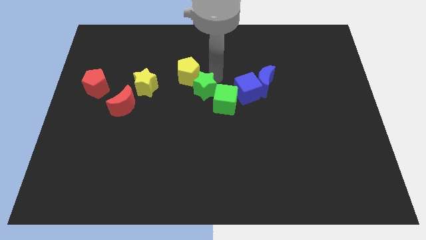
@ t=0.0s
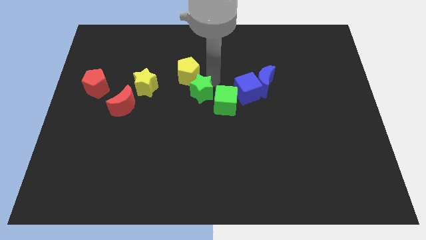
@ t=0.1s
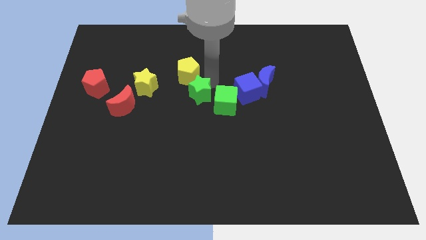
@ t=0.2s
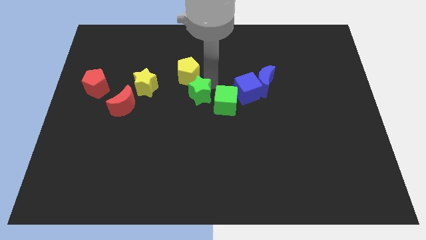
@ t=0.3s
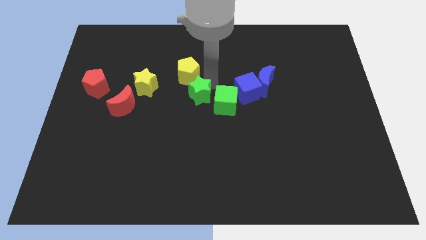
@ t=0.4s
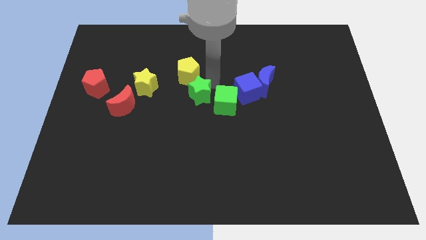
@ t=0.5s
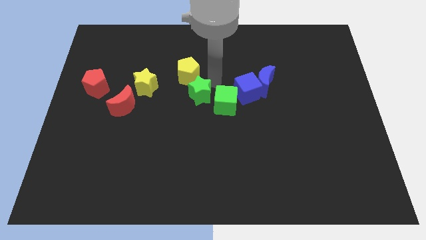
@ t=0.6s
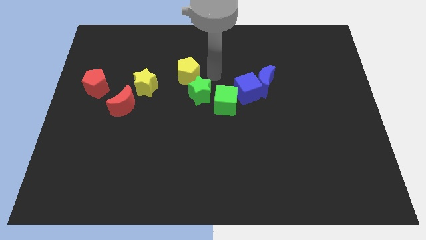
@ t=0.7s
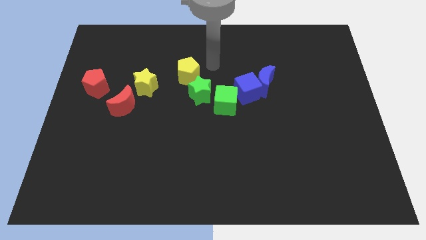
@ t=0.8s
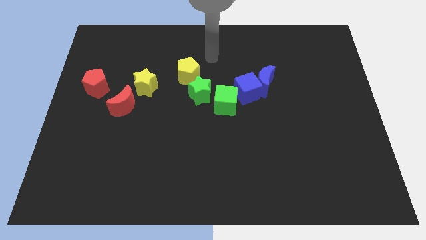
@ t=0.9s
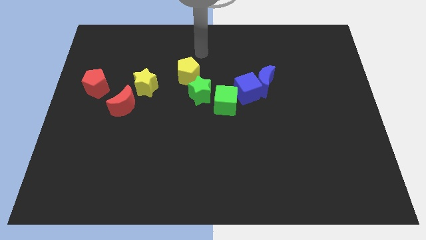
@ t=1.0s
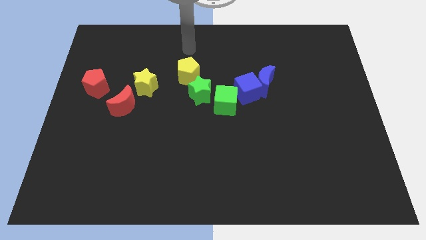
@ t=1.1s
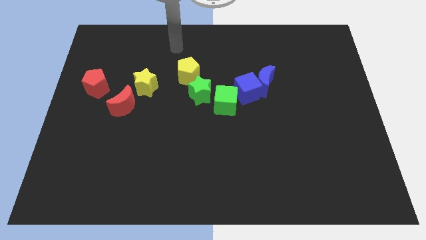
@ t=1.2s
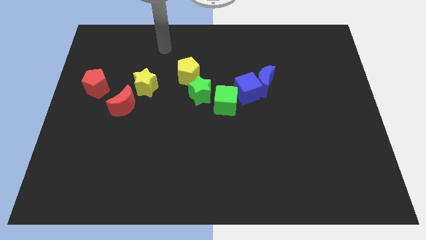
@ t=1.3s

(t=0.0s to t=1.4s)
move your arm away from the green star

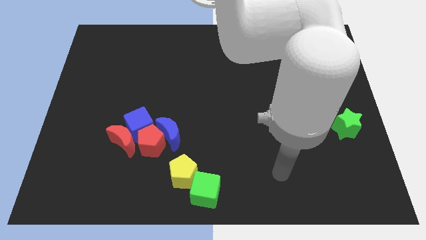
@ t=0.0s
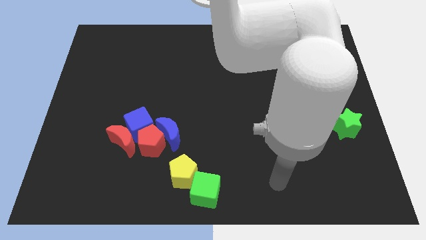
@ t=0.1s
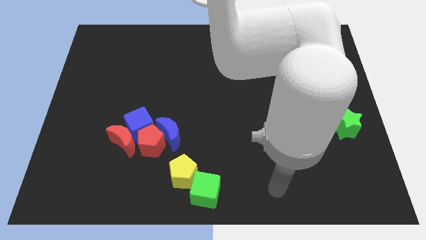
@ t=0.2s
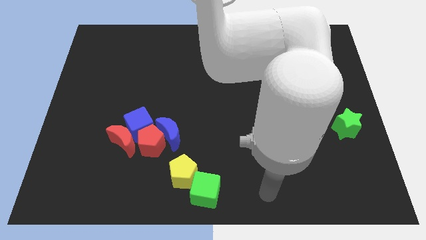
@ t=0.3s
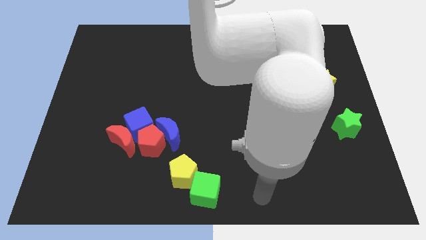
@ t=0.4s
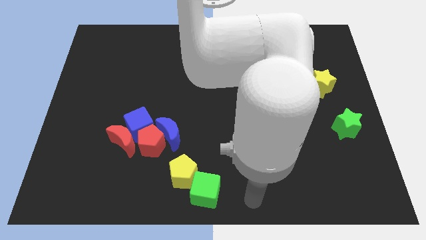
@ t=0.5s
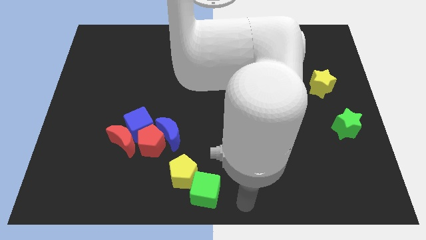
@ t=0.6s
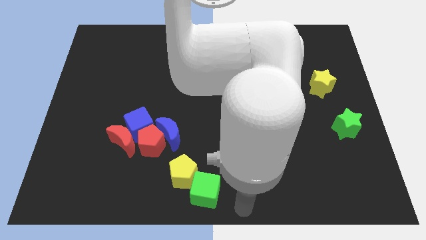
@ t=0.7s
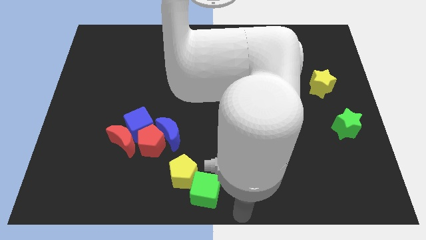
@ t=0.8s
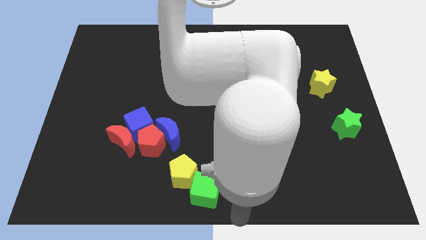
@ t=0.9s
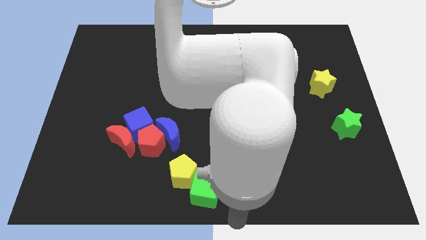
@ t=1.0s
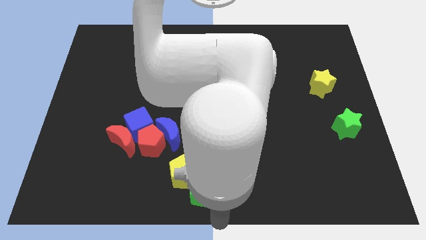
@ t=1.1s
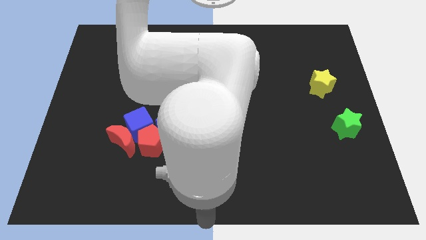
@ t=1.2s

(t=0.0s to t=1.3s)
place your hand at bottom center of the board

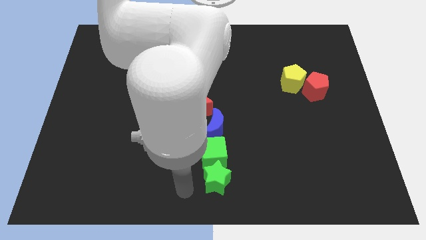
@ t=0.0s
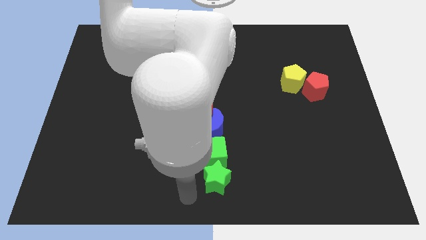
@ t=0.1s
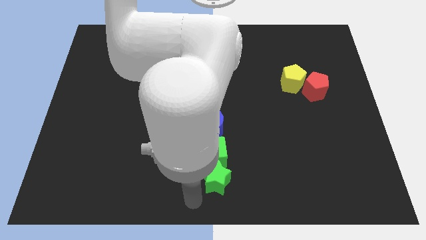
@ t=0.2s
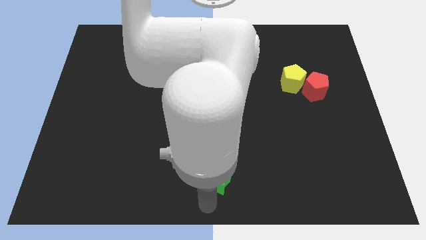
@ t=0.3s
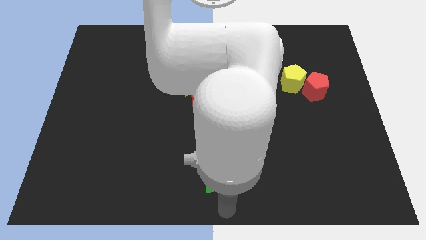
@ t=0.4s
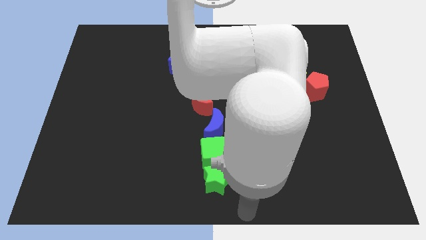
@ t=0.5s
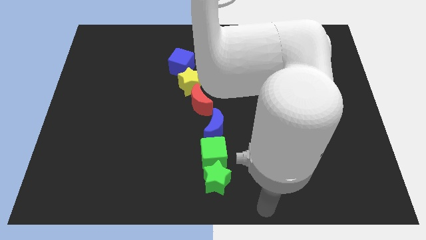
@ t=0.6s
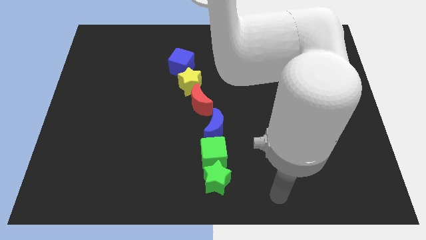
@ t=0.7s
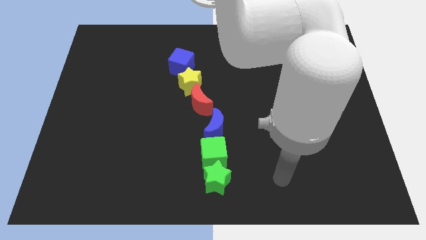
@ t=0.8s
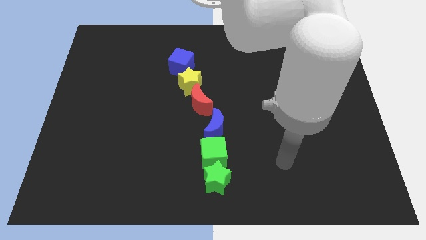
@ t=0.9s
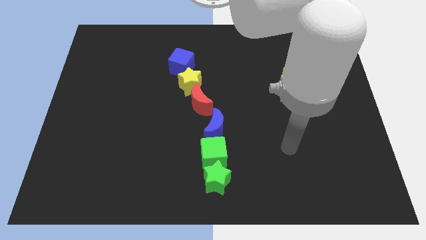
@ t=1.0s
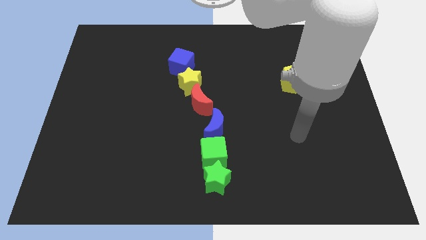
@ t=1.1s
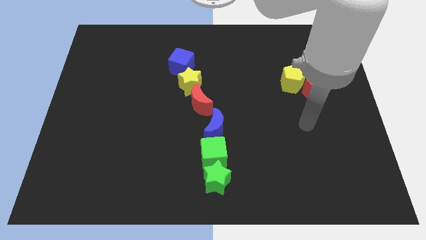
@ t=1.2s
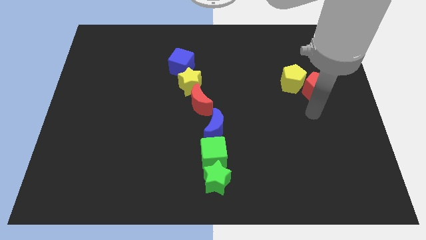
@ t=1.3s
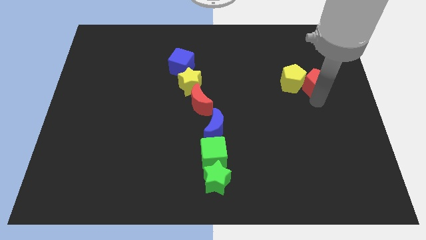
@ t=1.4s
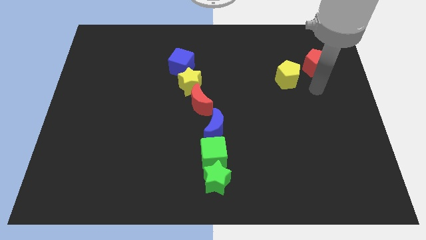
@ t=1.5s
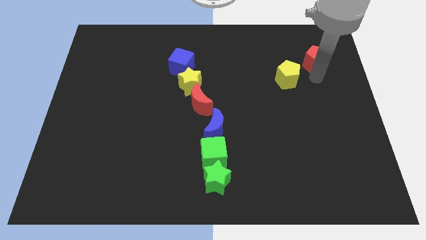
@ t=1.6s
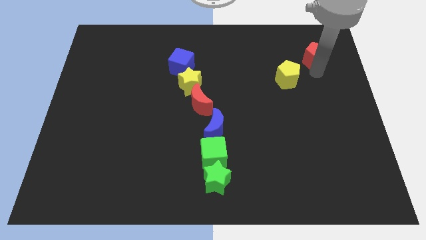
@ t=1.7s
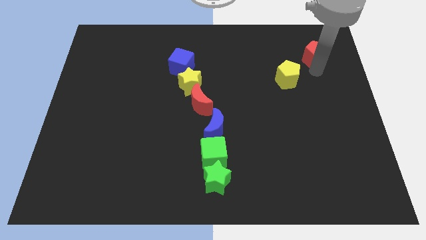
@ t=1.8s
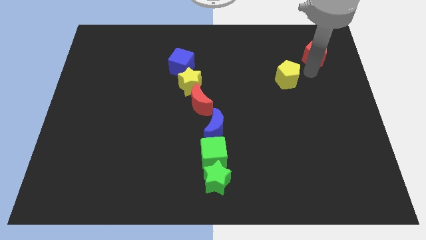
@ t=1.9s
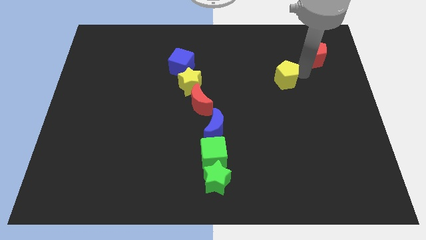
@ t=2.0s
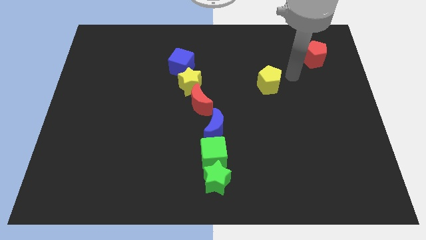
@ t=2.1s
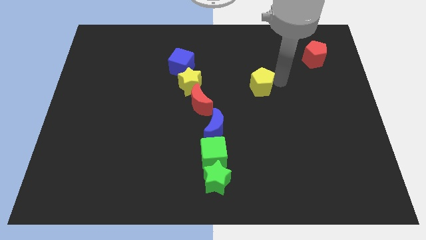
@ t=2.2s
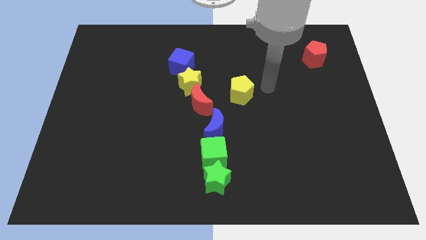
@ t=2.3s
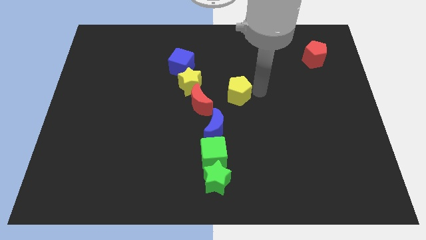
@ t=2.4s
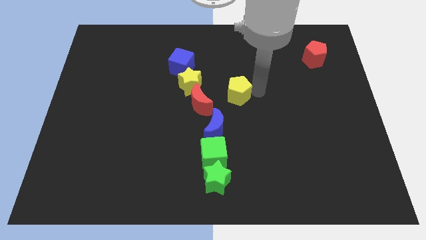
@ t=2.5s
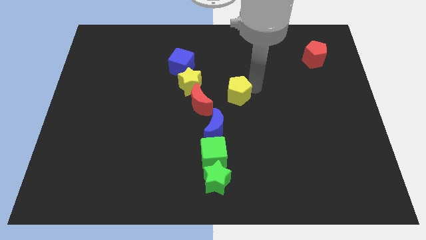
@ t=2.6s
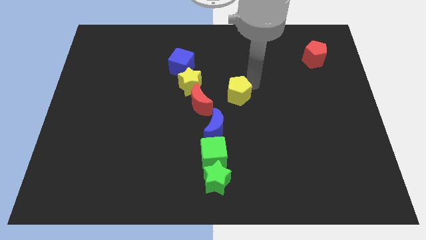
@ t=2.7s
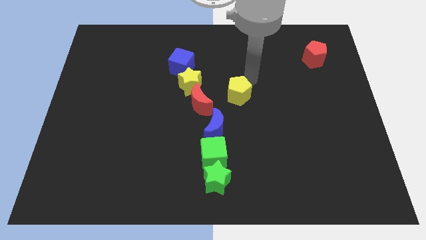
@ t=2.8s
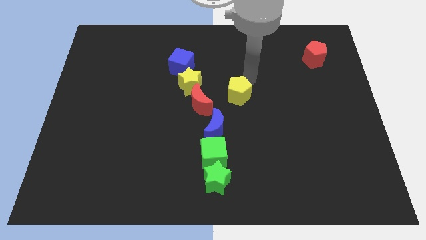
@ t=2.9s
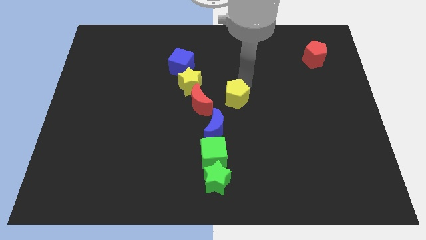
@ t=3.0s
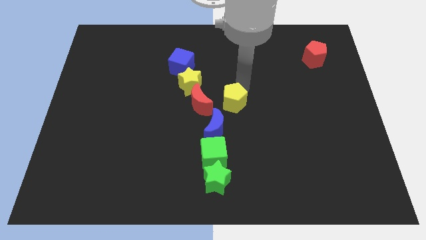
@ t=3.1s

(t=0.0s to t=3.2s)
separate the red pentagon and the yellow pentagon

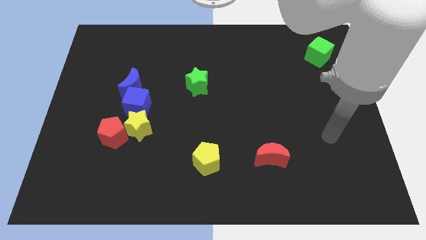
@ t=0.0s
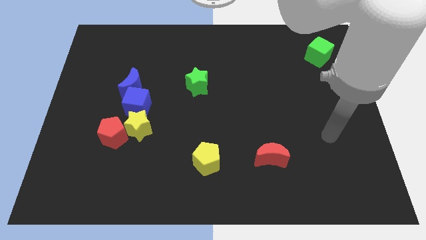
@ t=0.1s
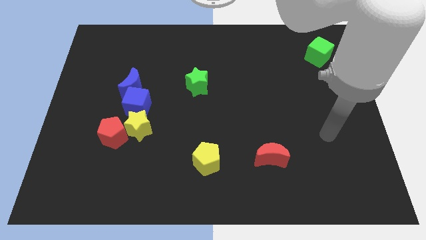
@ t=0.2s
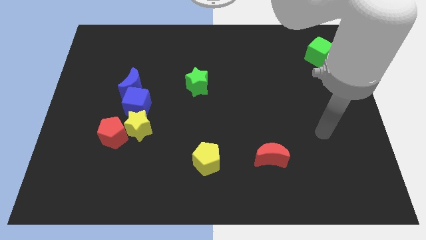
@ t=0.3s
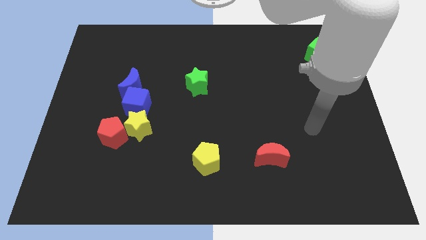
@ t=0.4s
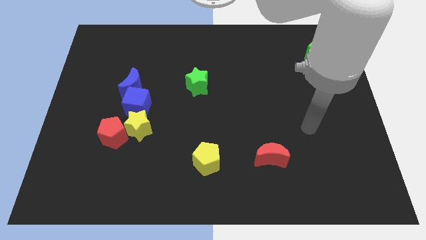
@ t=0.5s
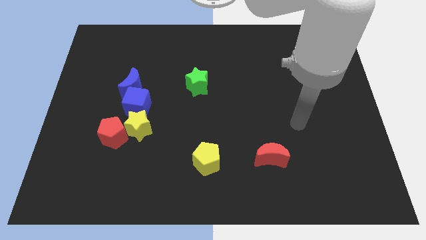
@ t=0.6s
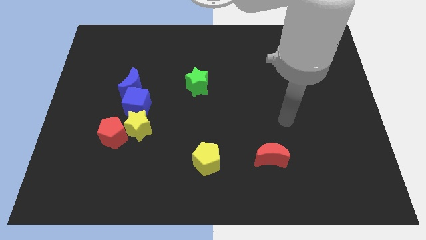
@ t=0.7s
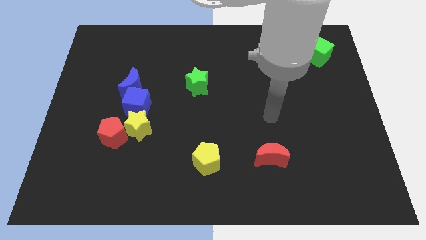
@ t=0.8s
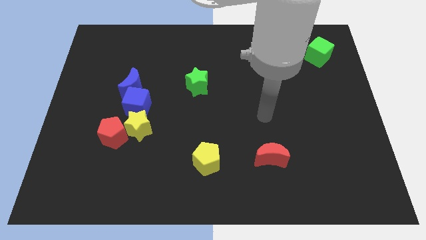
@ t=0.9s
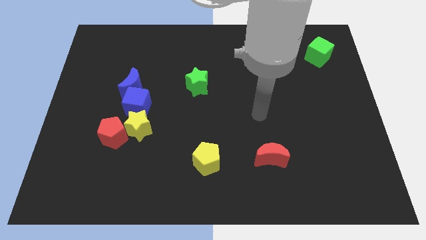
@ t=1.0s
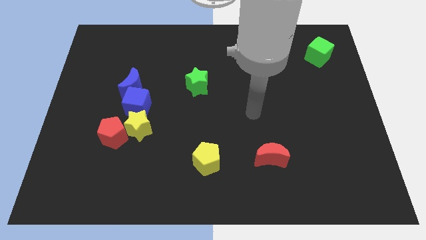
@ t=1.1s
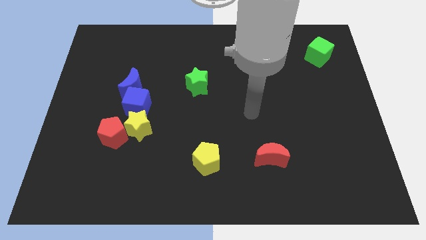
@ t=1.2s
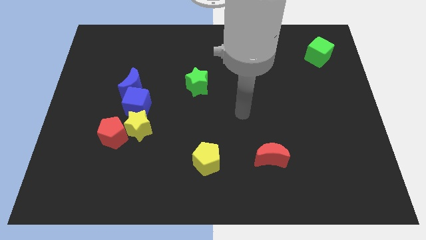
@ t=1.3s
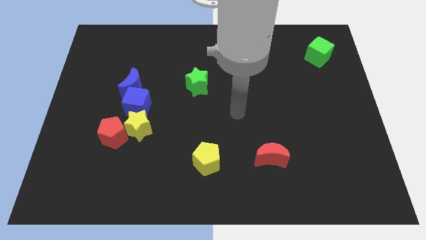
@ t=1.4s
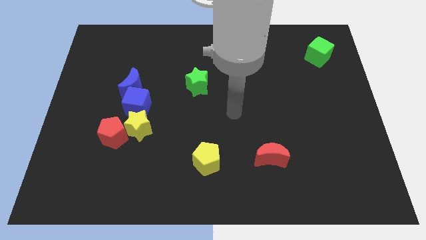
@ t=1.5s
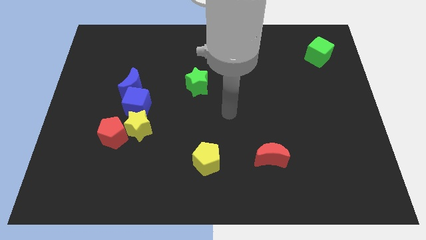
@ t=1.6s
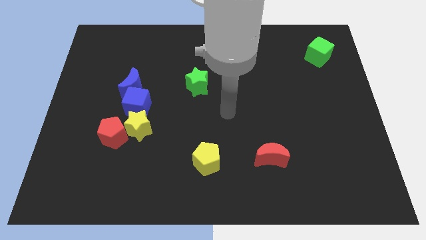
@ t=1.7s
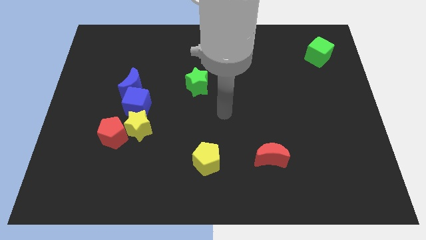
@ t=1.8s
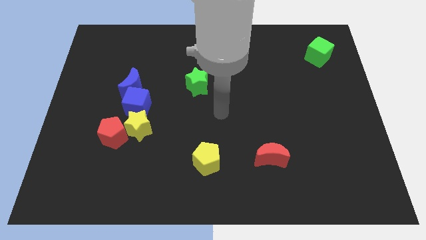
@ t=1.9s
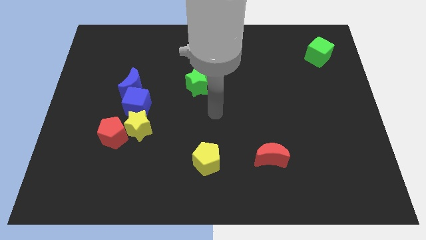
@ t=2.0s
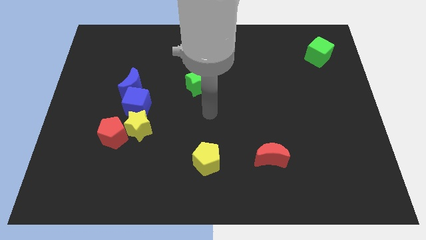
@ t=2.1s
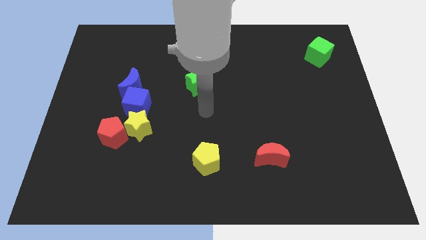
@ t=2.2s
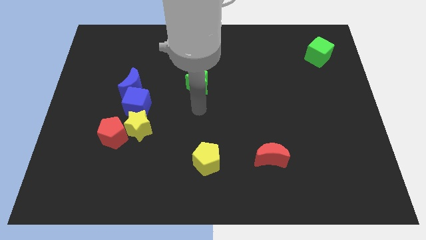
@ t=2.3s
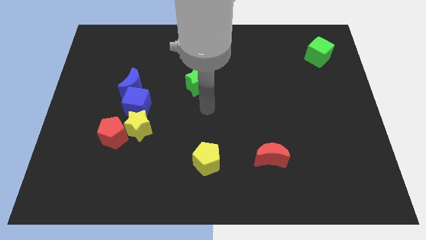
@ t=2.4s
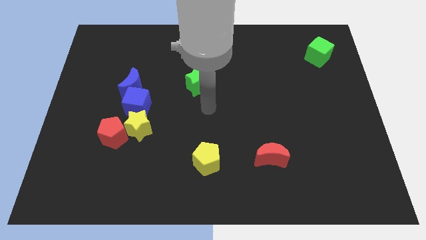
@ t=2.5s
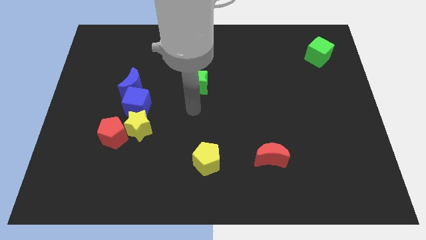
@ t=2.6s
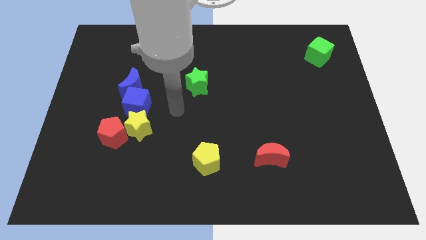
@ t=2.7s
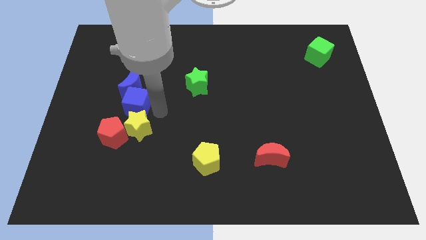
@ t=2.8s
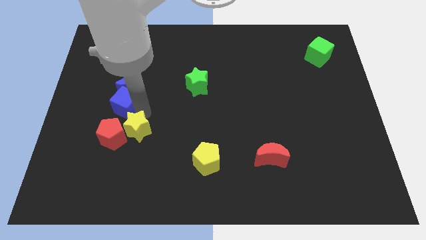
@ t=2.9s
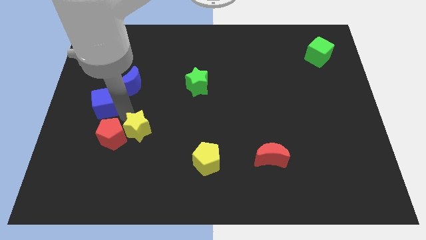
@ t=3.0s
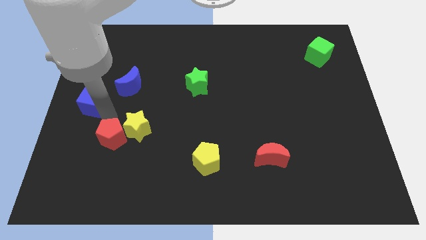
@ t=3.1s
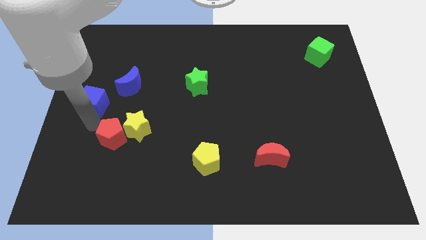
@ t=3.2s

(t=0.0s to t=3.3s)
separate the blue cube from the vertical line of blocks
